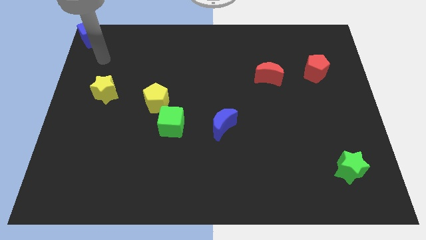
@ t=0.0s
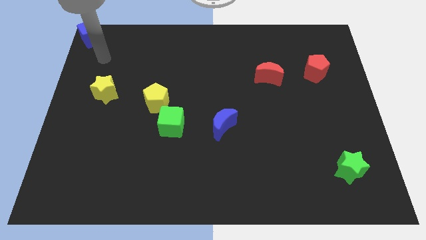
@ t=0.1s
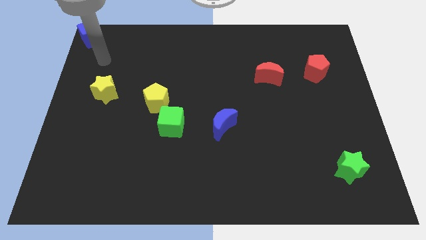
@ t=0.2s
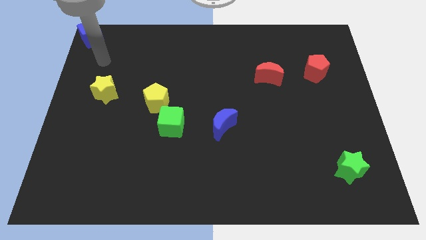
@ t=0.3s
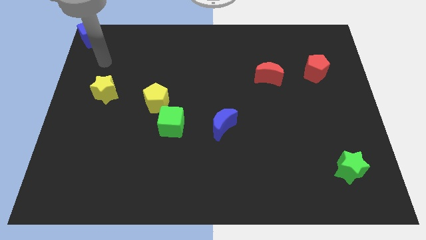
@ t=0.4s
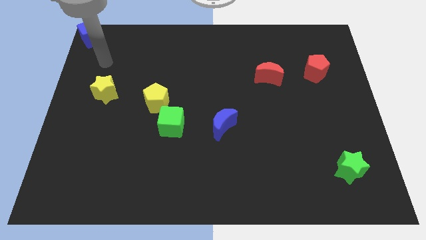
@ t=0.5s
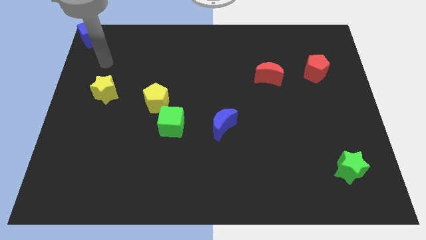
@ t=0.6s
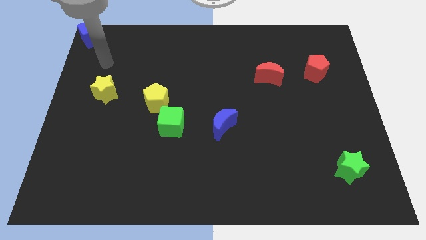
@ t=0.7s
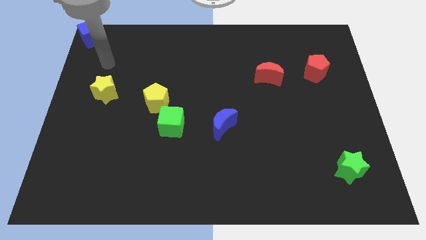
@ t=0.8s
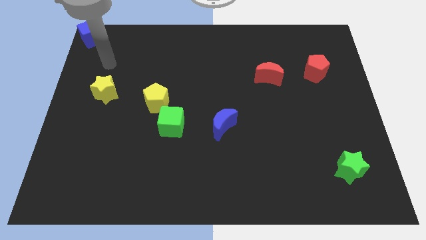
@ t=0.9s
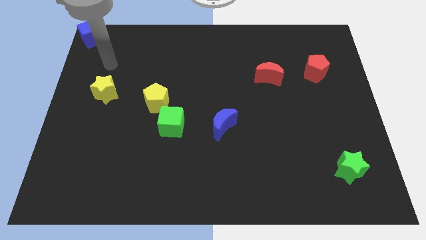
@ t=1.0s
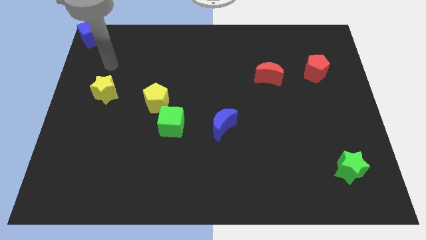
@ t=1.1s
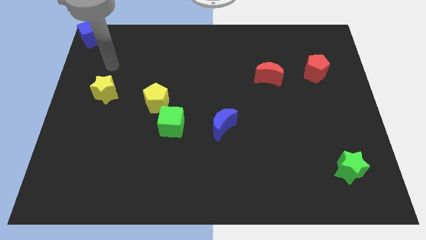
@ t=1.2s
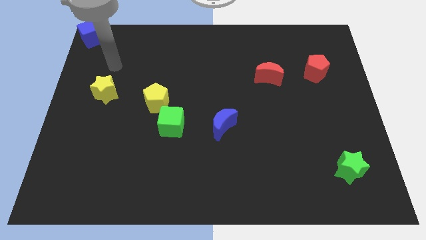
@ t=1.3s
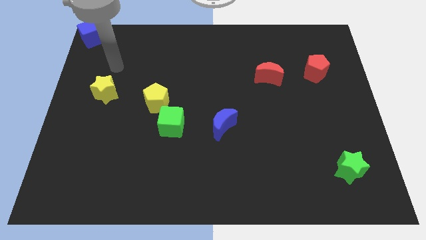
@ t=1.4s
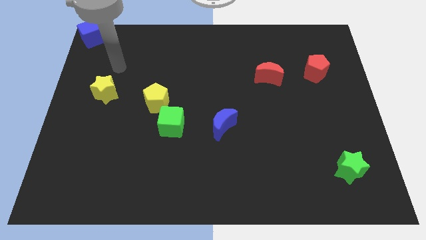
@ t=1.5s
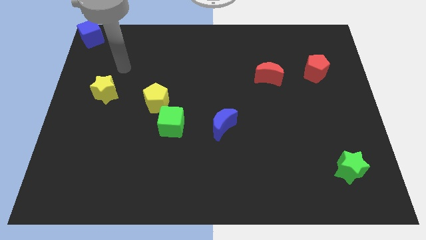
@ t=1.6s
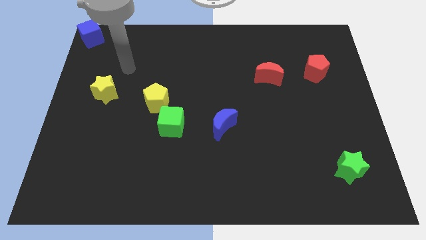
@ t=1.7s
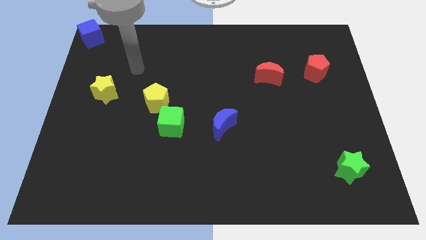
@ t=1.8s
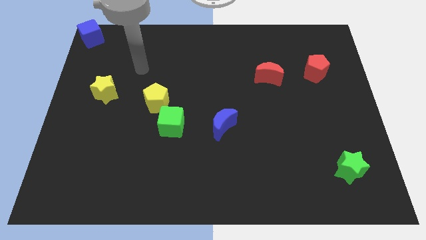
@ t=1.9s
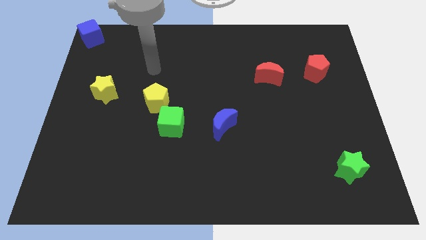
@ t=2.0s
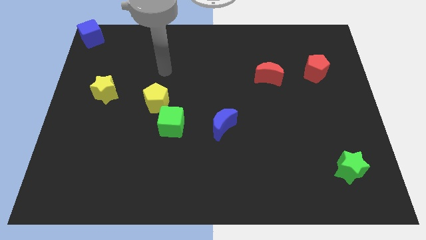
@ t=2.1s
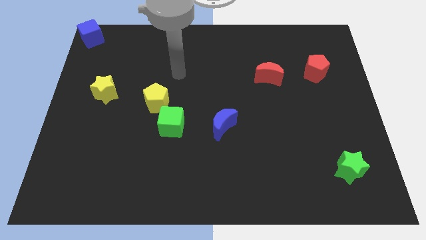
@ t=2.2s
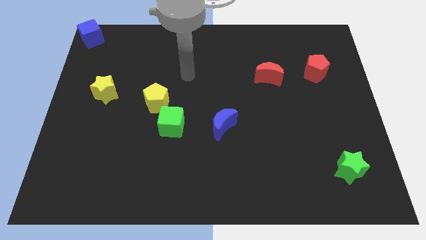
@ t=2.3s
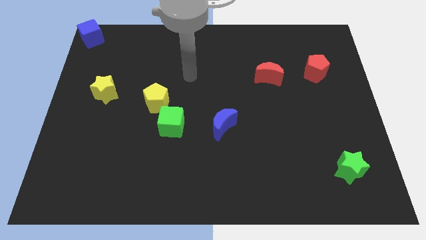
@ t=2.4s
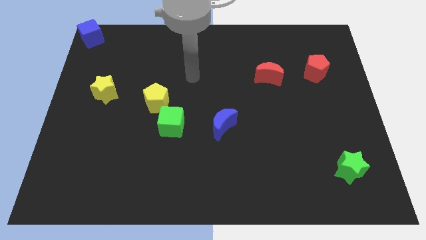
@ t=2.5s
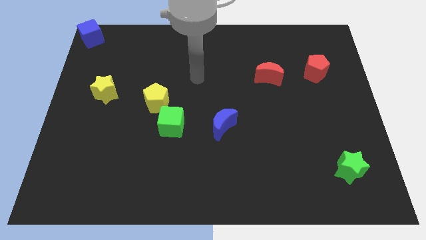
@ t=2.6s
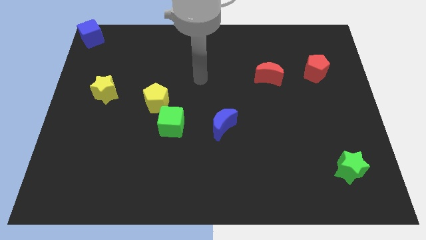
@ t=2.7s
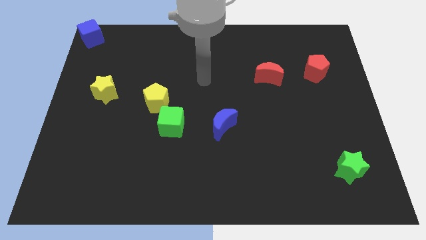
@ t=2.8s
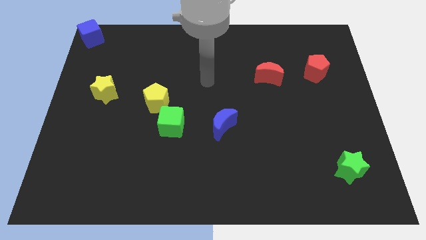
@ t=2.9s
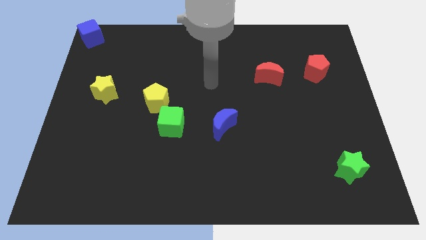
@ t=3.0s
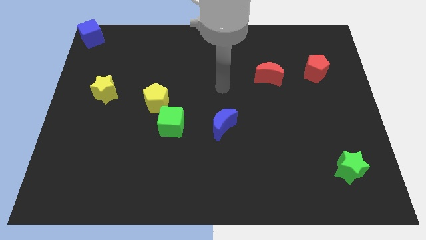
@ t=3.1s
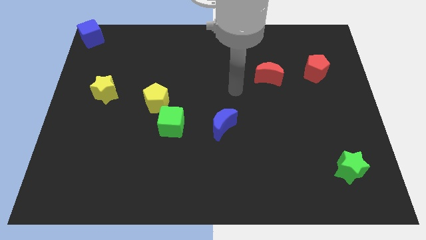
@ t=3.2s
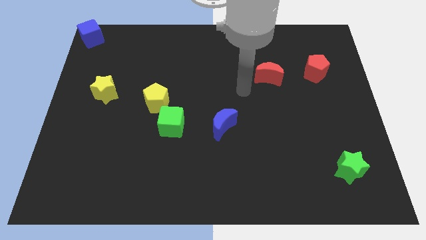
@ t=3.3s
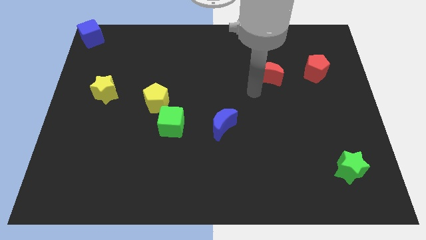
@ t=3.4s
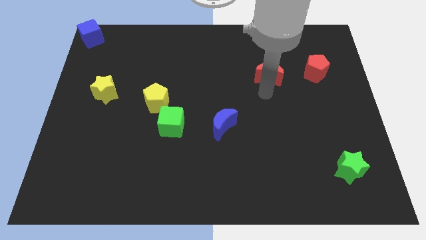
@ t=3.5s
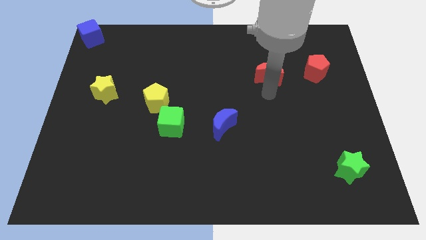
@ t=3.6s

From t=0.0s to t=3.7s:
place your arm below the red moon

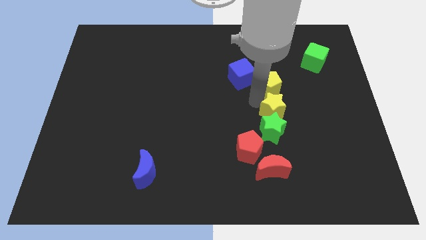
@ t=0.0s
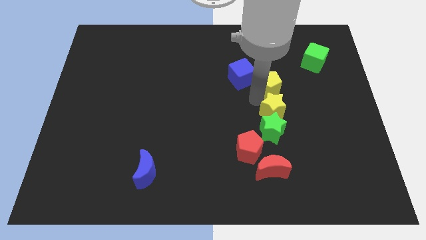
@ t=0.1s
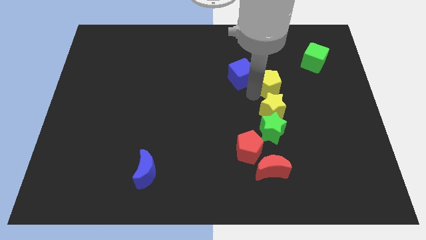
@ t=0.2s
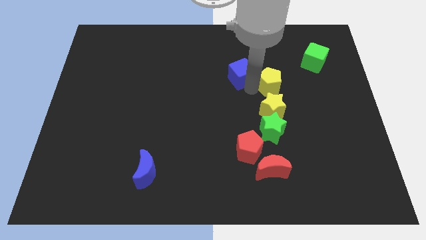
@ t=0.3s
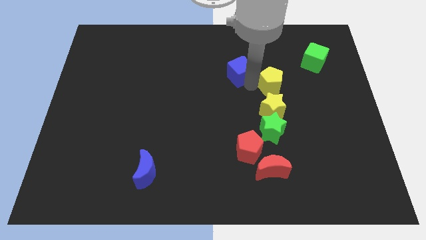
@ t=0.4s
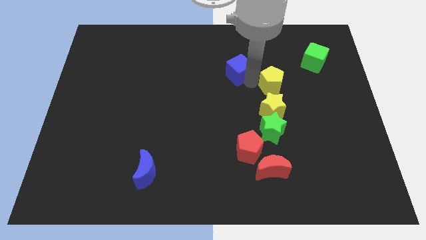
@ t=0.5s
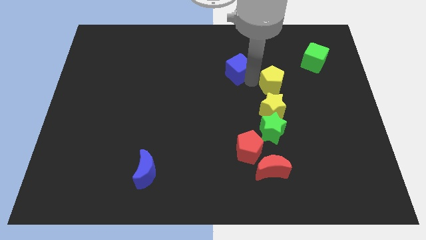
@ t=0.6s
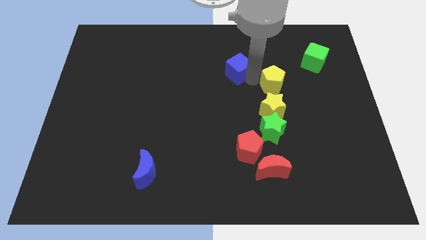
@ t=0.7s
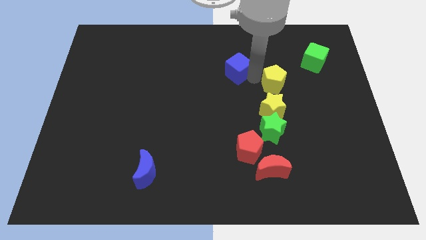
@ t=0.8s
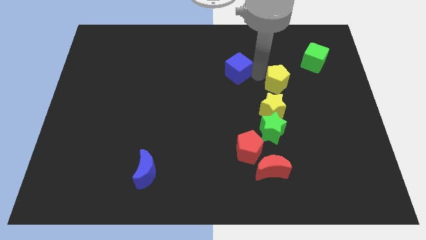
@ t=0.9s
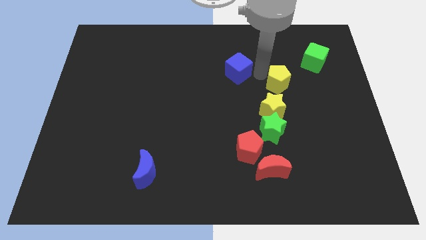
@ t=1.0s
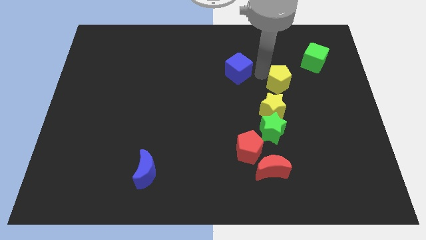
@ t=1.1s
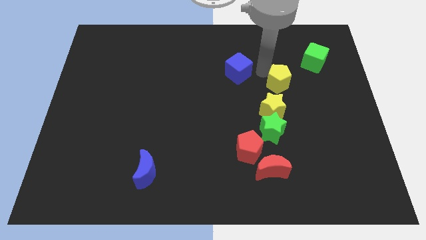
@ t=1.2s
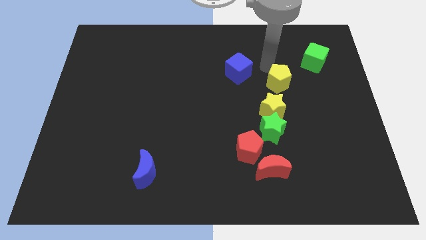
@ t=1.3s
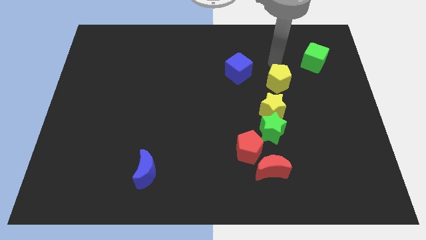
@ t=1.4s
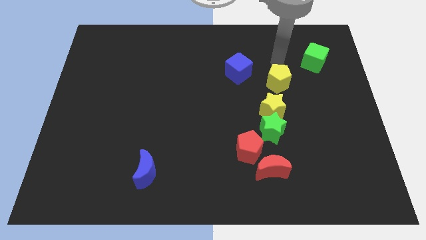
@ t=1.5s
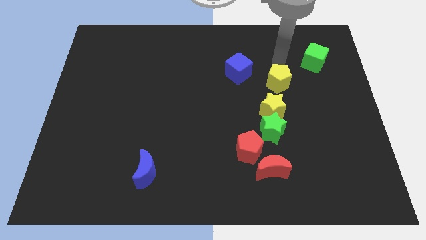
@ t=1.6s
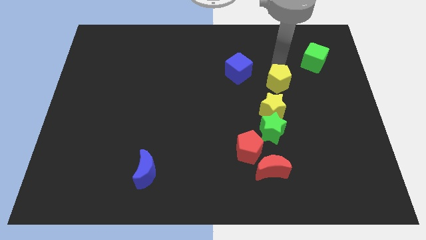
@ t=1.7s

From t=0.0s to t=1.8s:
place your arm above the yellow pentagon

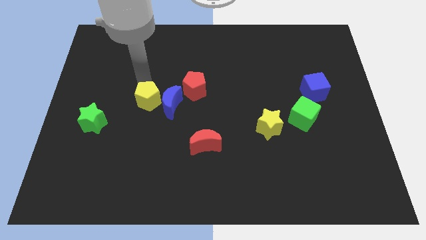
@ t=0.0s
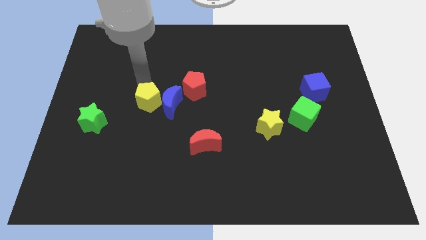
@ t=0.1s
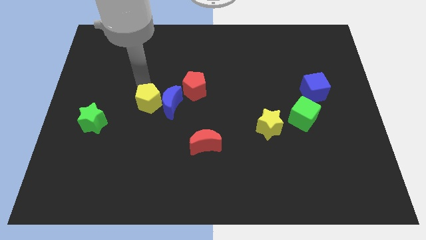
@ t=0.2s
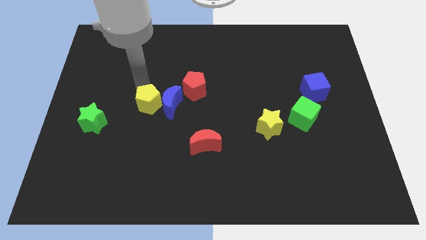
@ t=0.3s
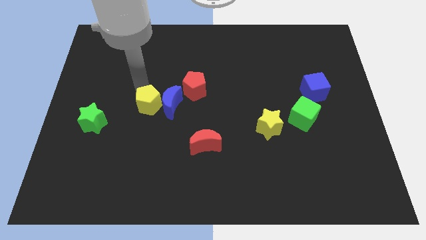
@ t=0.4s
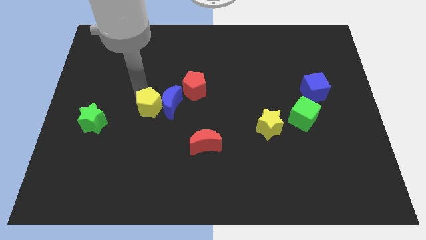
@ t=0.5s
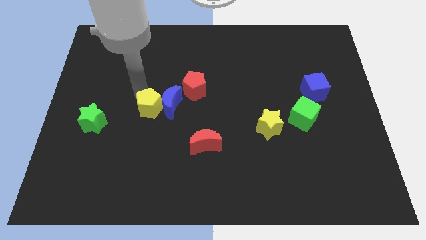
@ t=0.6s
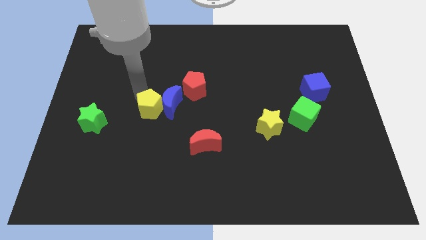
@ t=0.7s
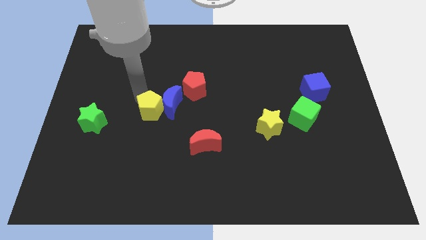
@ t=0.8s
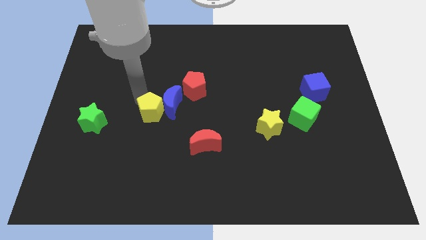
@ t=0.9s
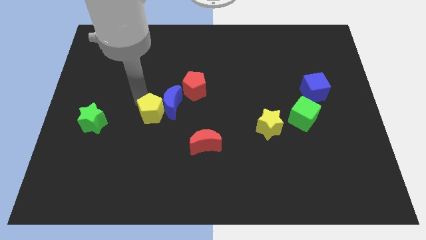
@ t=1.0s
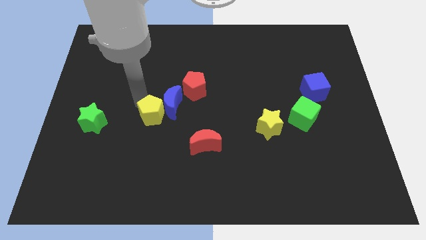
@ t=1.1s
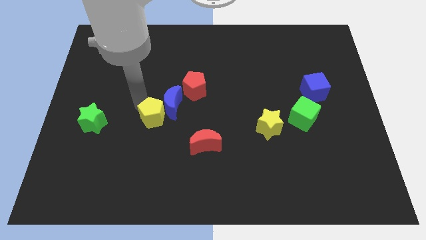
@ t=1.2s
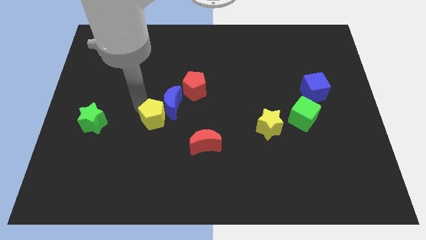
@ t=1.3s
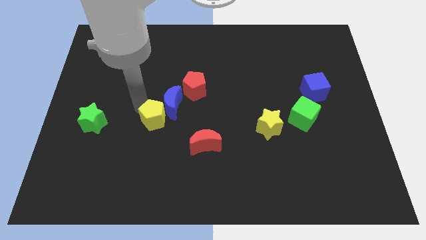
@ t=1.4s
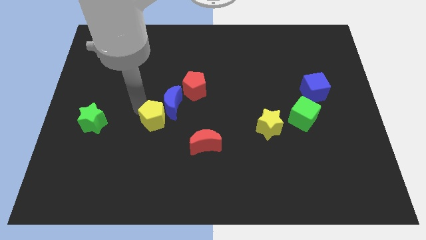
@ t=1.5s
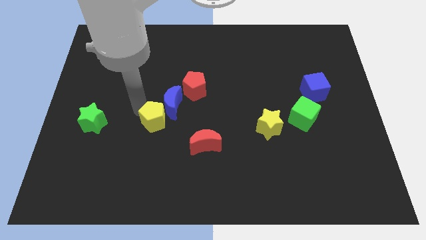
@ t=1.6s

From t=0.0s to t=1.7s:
place the yellow pentagon to the right of the green star

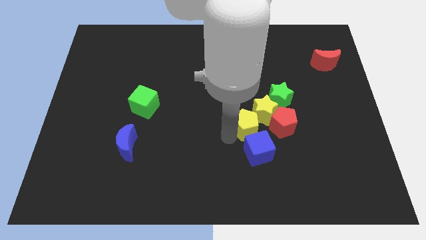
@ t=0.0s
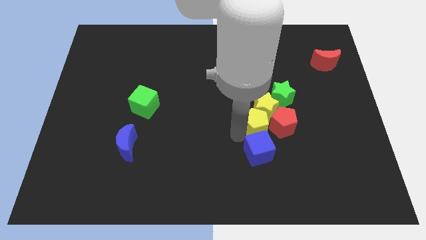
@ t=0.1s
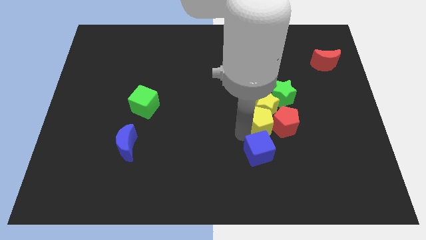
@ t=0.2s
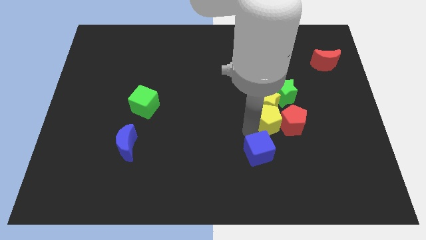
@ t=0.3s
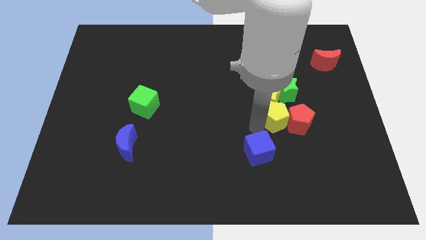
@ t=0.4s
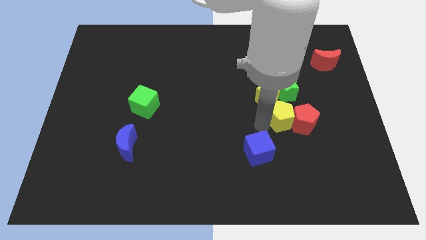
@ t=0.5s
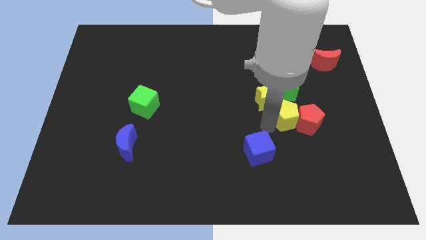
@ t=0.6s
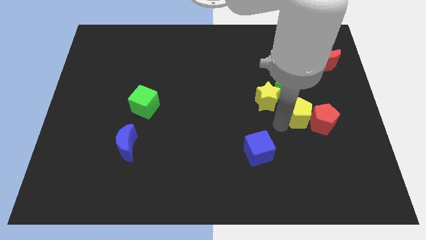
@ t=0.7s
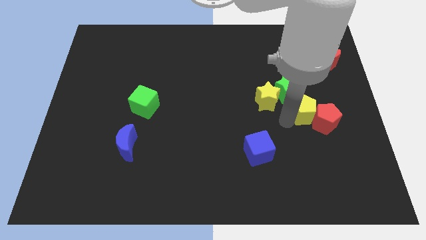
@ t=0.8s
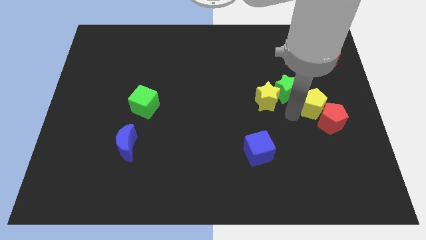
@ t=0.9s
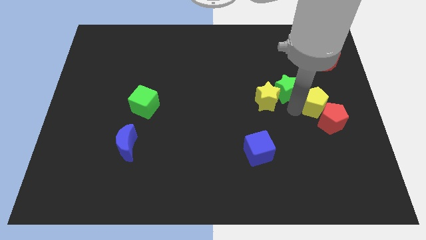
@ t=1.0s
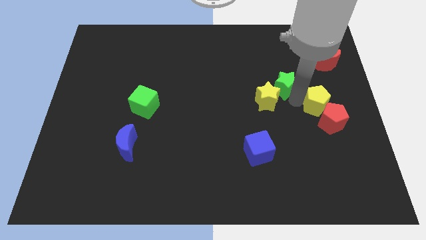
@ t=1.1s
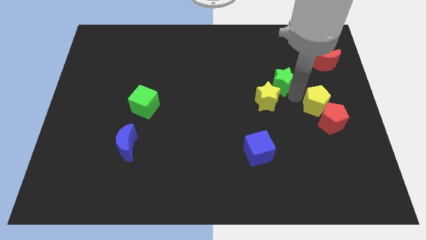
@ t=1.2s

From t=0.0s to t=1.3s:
push the yellow pentagon to the right side of the yellow star

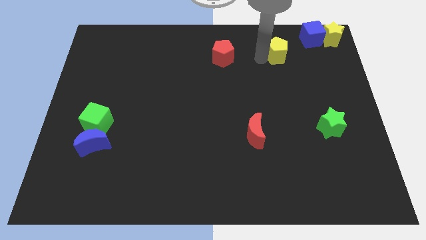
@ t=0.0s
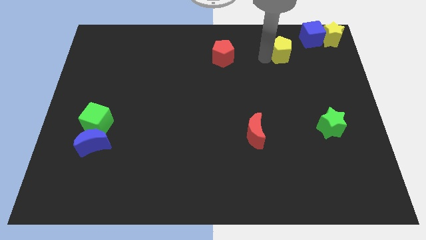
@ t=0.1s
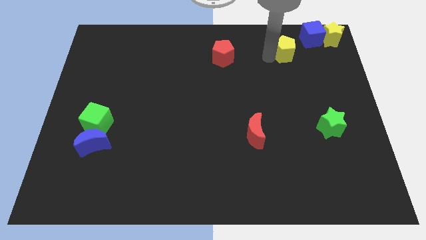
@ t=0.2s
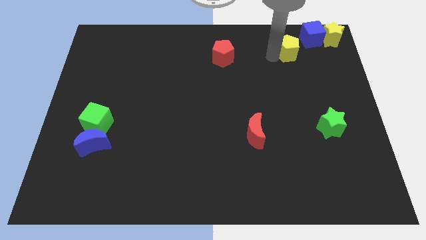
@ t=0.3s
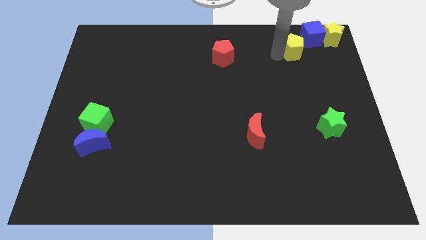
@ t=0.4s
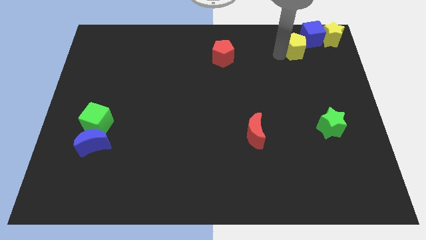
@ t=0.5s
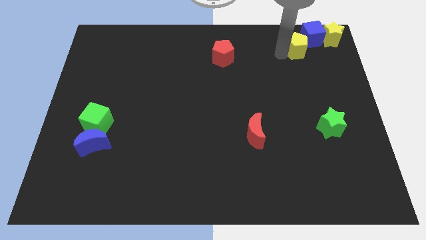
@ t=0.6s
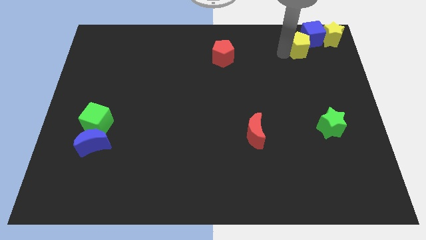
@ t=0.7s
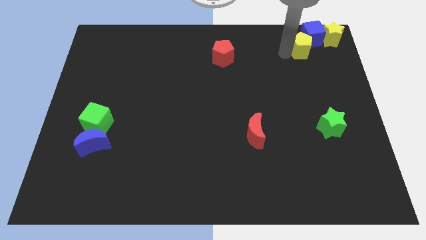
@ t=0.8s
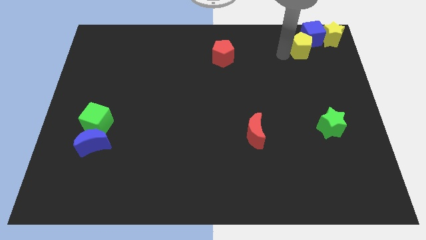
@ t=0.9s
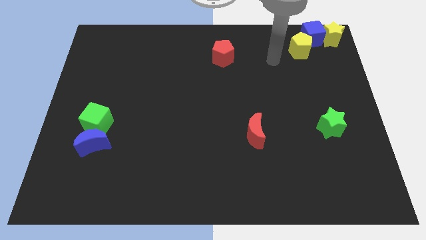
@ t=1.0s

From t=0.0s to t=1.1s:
place the yellow pentagon towards the bottom left side of the blue cube
